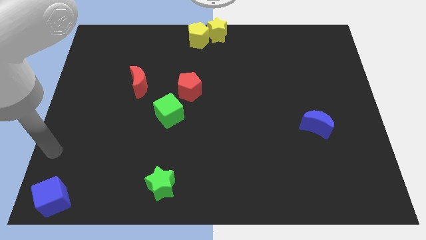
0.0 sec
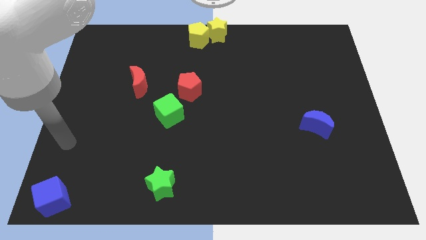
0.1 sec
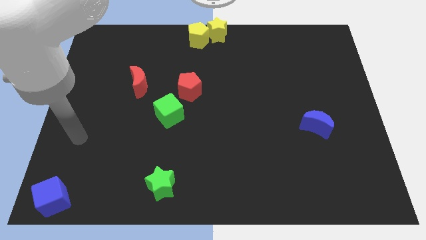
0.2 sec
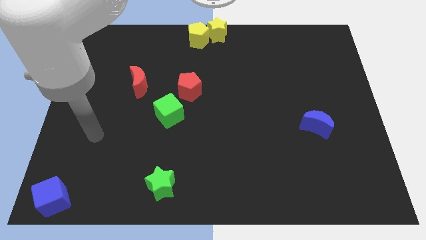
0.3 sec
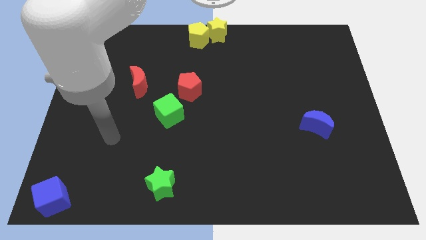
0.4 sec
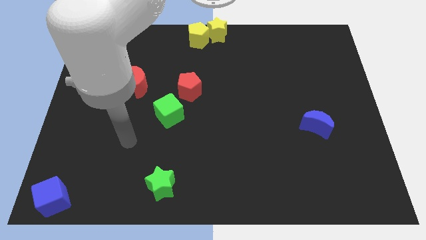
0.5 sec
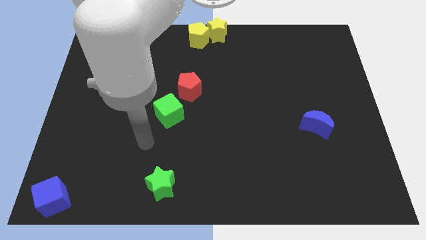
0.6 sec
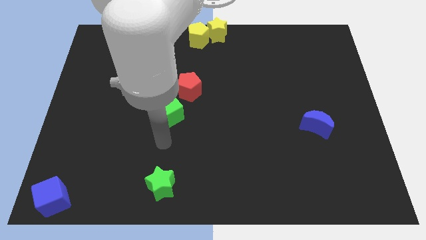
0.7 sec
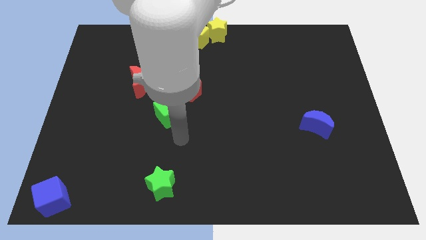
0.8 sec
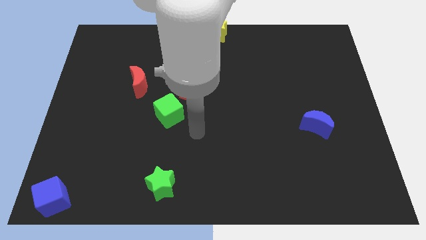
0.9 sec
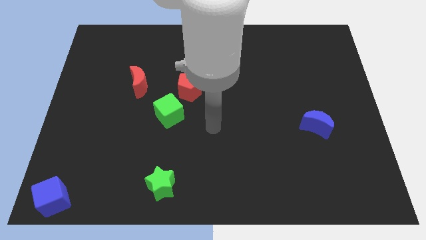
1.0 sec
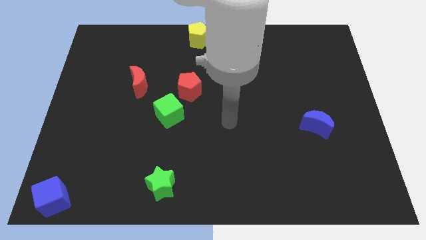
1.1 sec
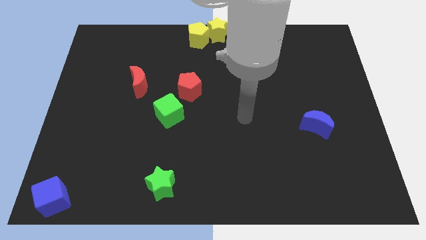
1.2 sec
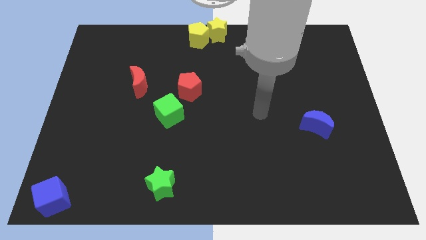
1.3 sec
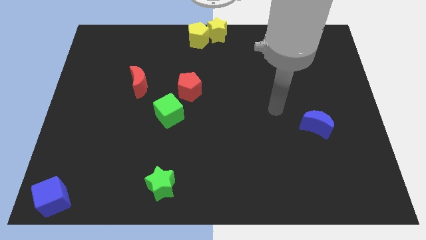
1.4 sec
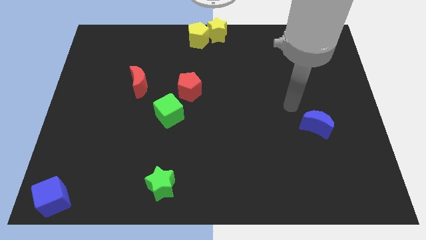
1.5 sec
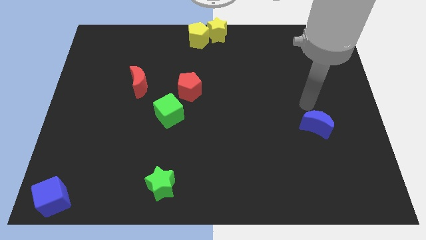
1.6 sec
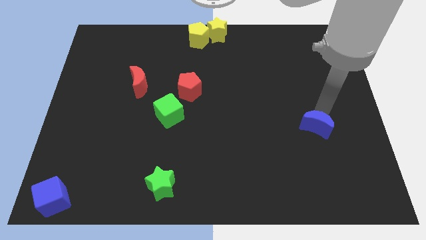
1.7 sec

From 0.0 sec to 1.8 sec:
point your arm on top of blue moon

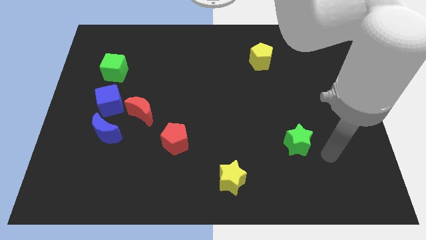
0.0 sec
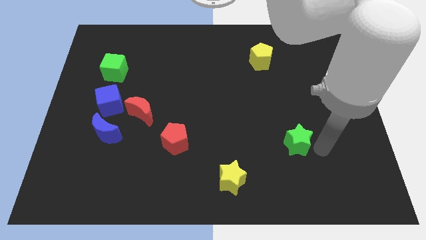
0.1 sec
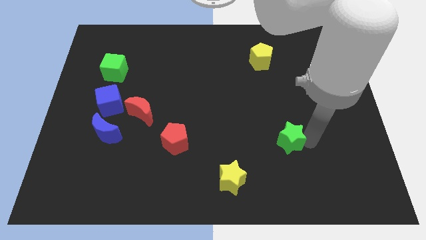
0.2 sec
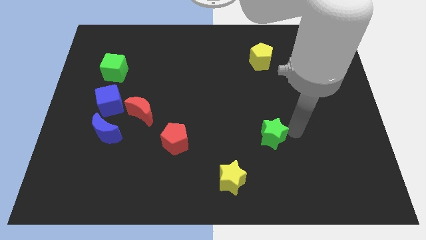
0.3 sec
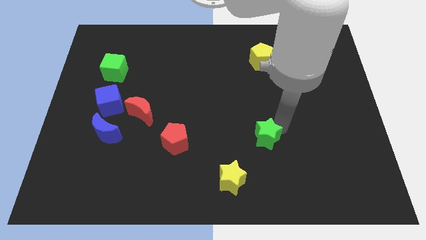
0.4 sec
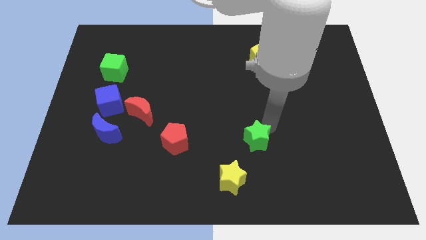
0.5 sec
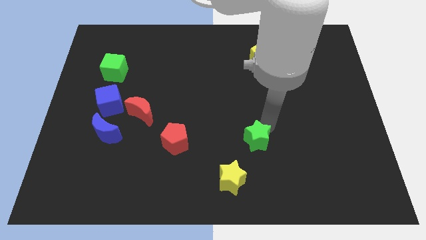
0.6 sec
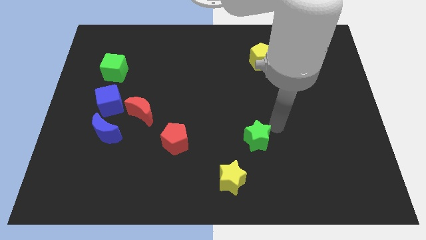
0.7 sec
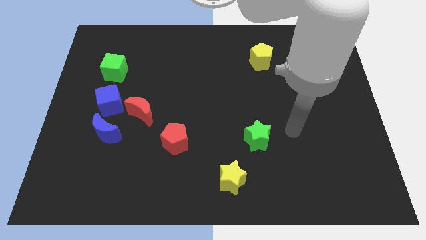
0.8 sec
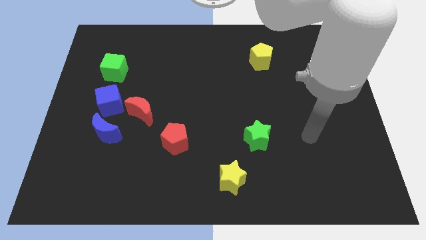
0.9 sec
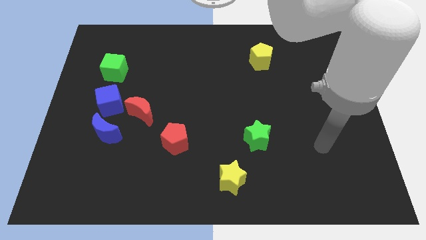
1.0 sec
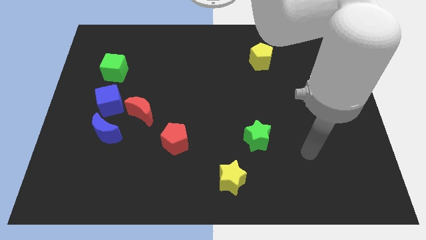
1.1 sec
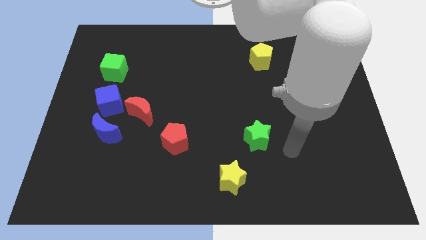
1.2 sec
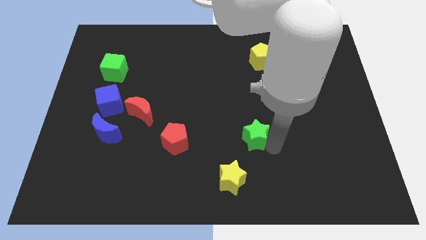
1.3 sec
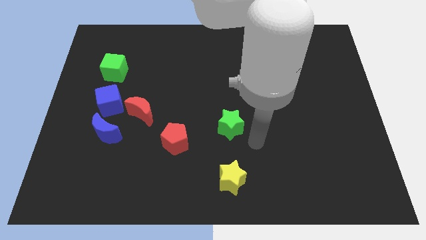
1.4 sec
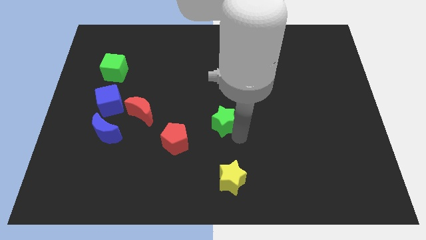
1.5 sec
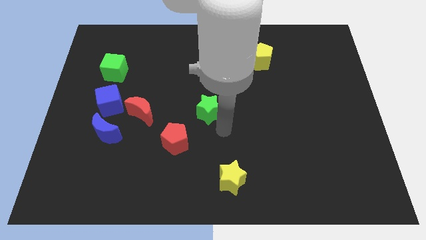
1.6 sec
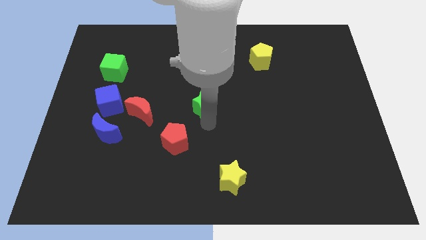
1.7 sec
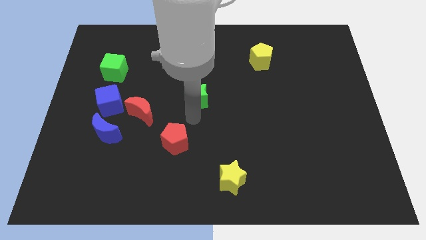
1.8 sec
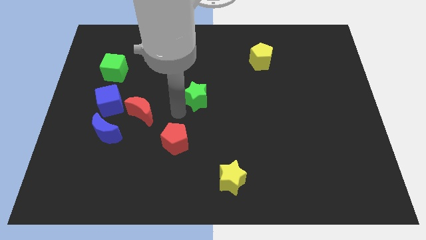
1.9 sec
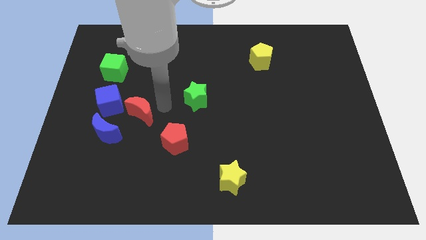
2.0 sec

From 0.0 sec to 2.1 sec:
slide the green star diagonally to the red pentagon

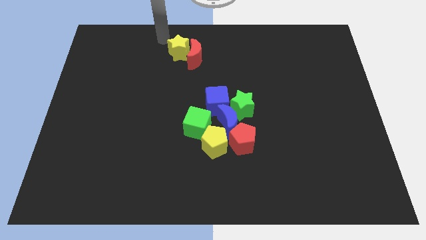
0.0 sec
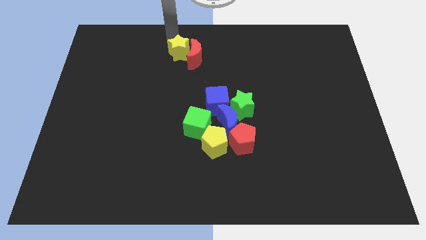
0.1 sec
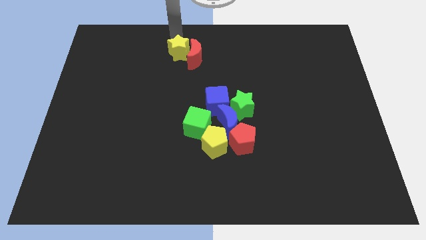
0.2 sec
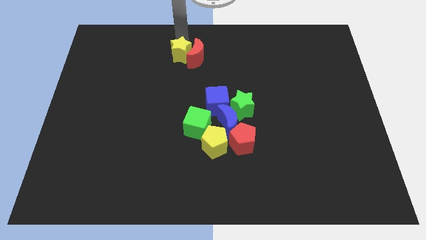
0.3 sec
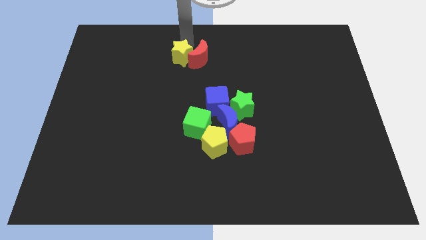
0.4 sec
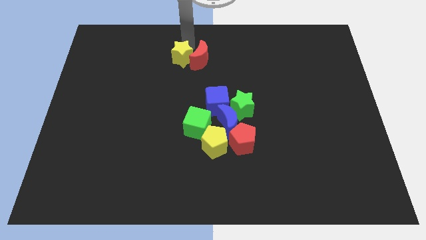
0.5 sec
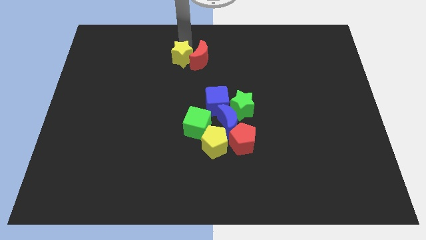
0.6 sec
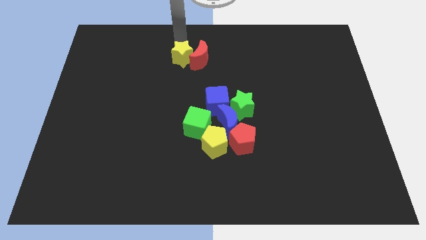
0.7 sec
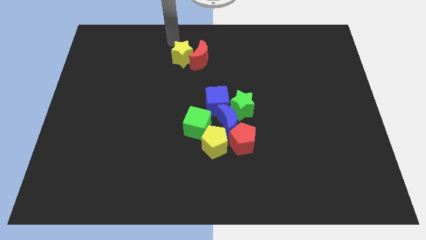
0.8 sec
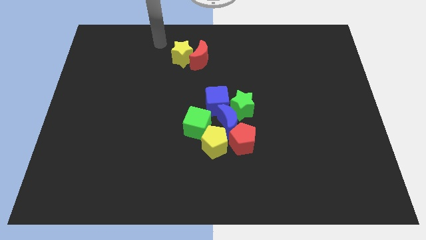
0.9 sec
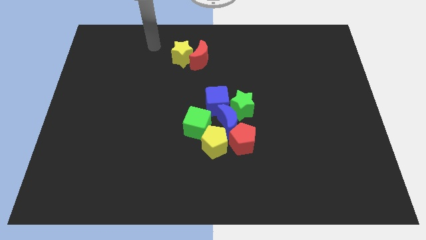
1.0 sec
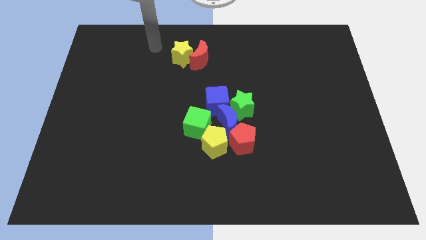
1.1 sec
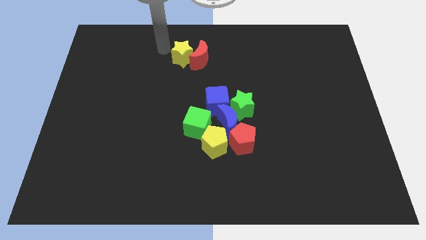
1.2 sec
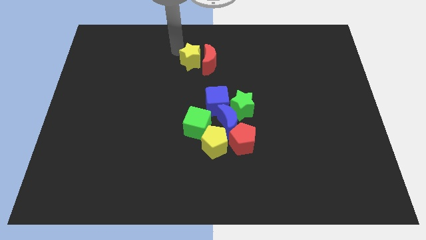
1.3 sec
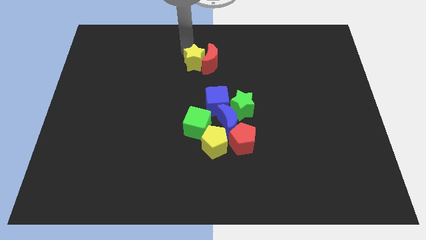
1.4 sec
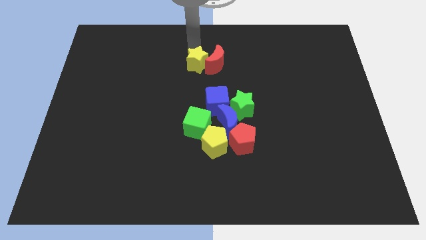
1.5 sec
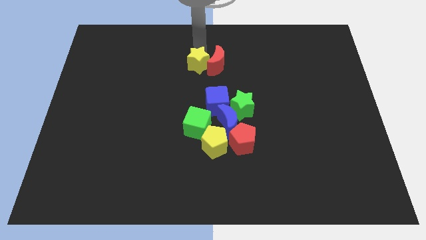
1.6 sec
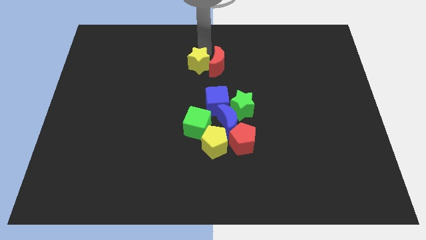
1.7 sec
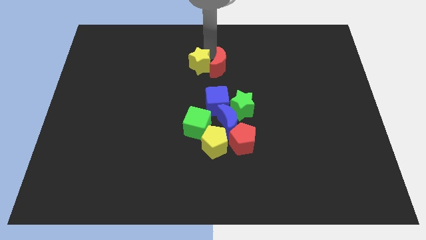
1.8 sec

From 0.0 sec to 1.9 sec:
put the red crescent vertically above the blue cube

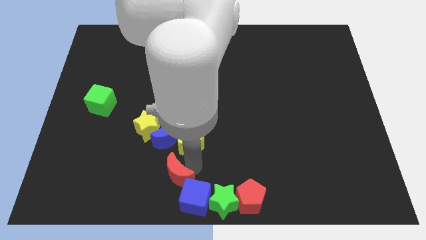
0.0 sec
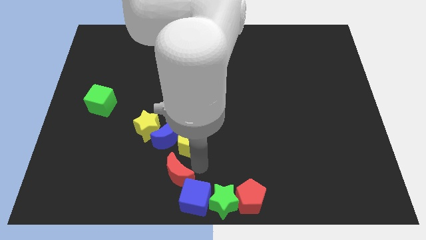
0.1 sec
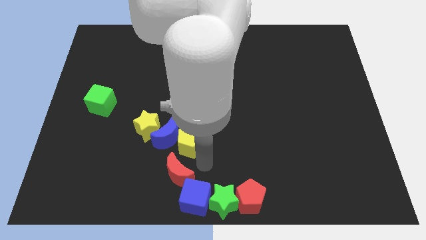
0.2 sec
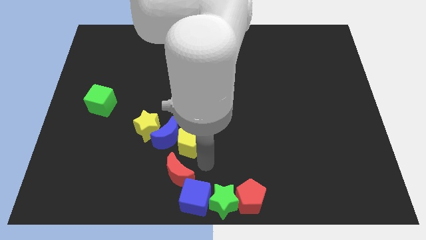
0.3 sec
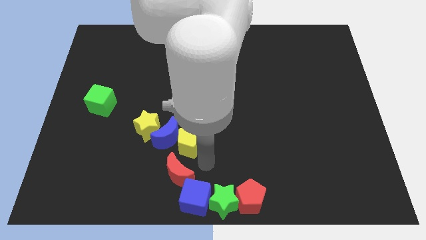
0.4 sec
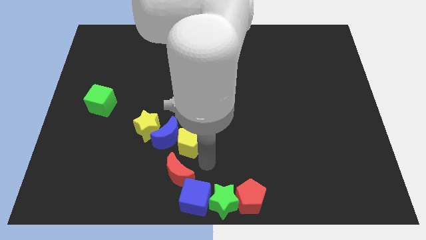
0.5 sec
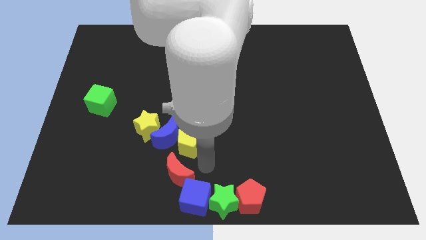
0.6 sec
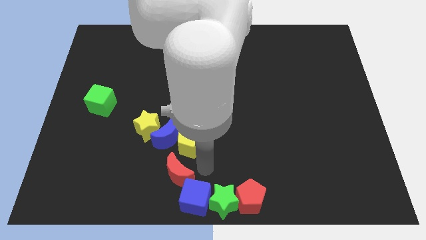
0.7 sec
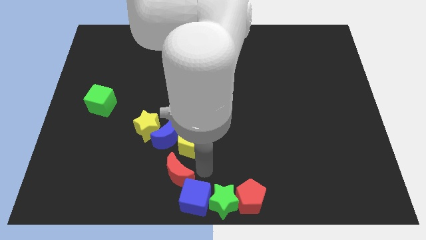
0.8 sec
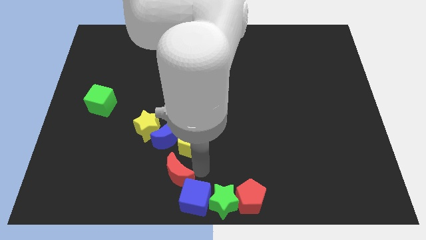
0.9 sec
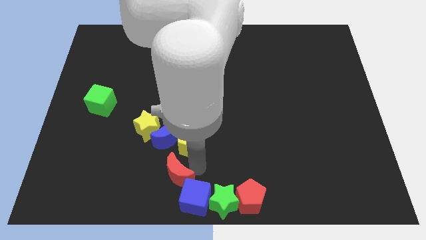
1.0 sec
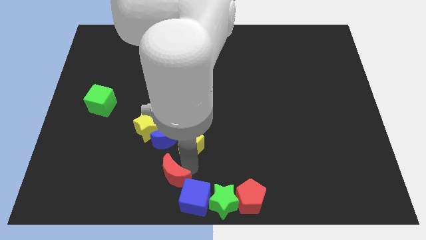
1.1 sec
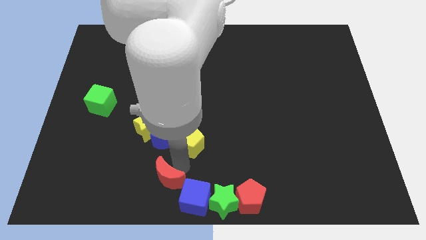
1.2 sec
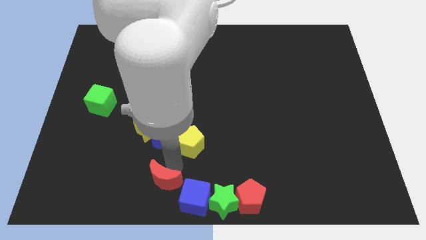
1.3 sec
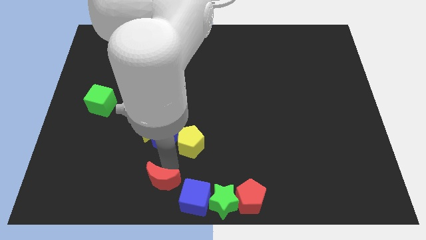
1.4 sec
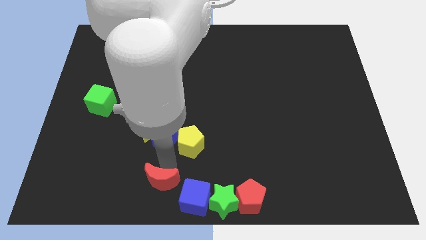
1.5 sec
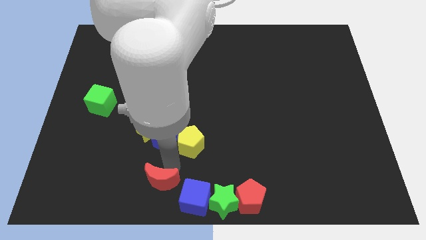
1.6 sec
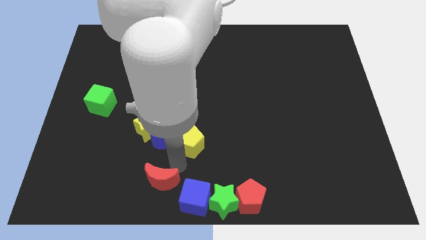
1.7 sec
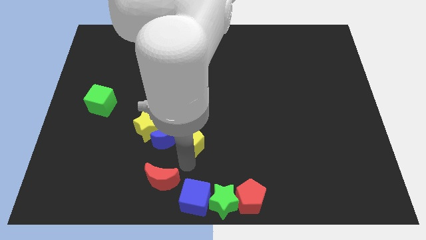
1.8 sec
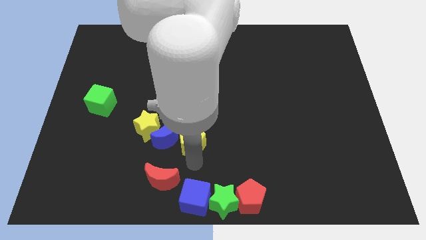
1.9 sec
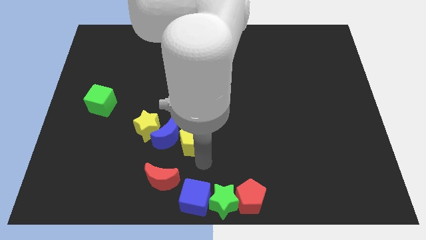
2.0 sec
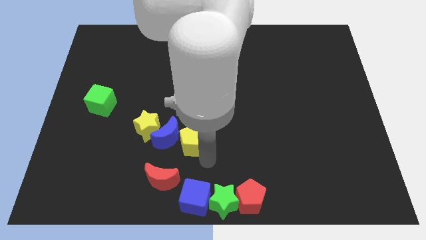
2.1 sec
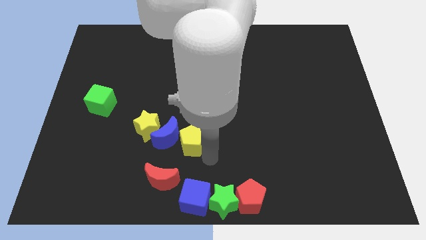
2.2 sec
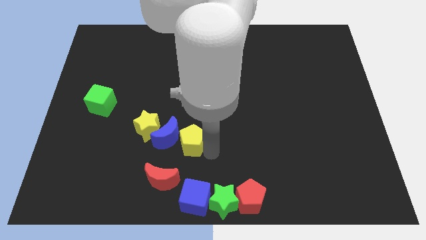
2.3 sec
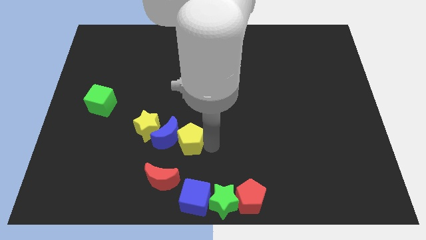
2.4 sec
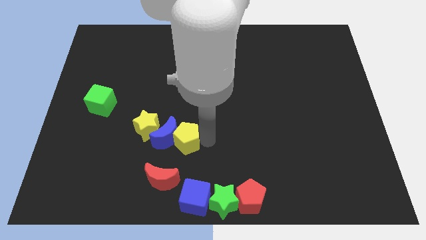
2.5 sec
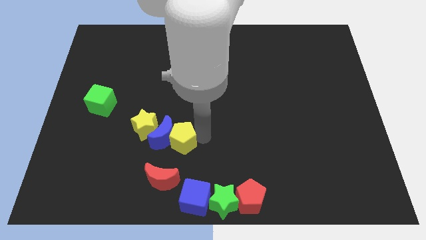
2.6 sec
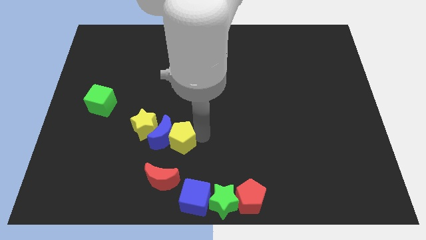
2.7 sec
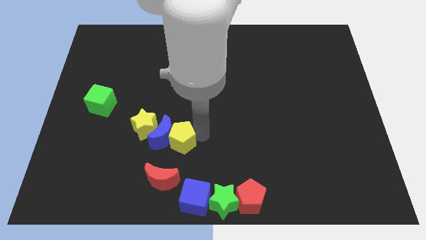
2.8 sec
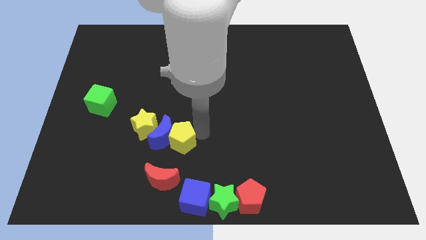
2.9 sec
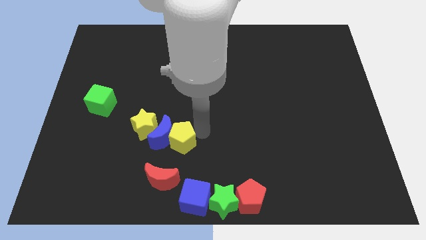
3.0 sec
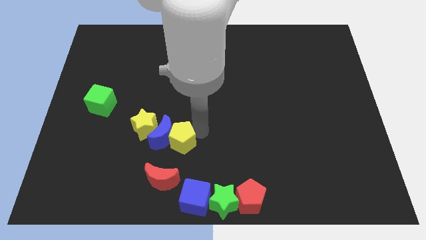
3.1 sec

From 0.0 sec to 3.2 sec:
push the red crescent towards the top left of the blue cube

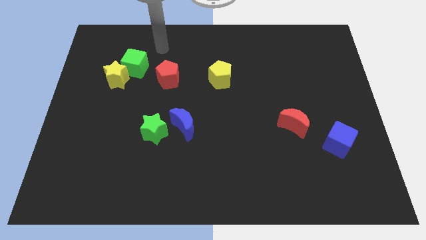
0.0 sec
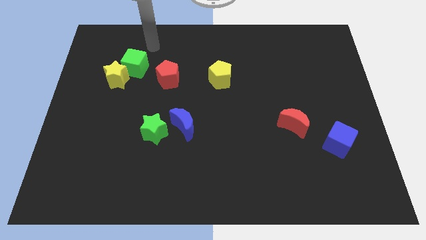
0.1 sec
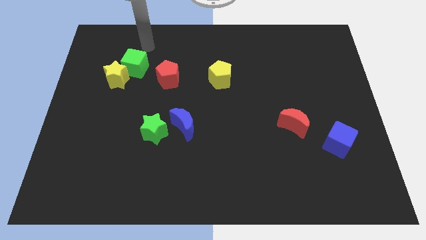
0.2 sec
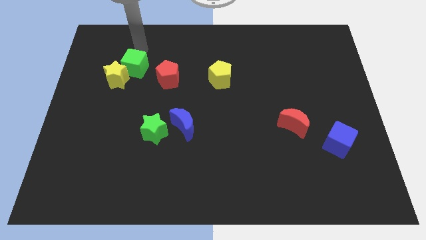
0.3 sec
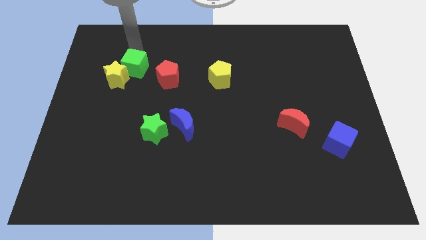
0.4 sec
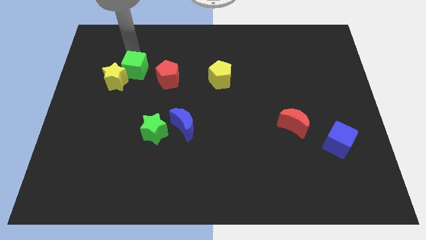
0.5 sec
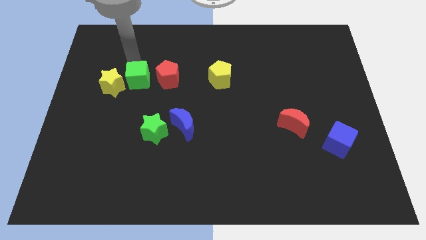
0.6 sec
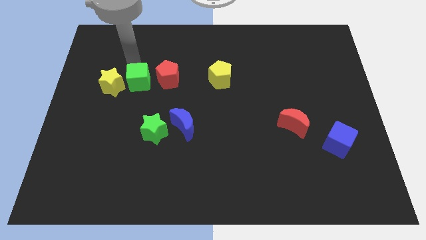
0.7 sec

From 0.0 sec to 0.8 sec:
move the green cube to the left of the red pentagon
